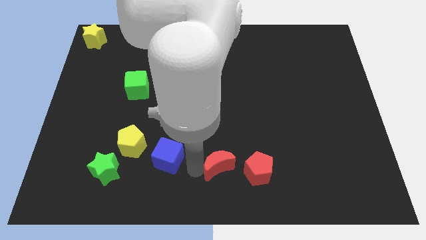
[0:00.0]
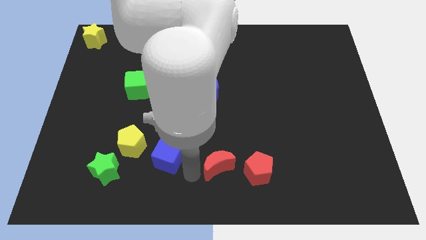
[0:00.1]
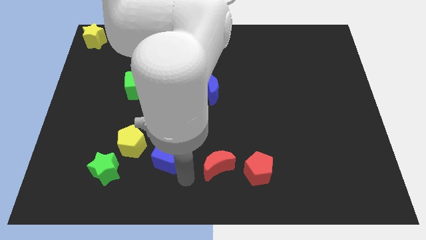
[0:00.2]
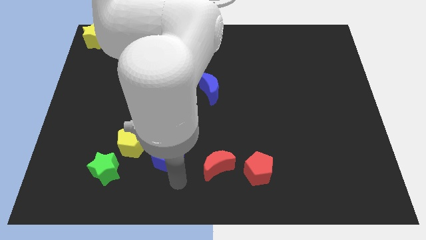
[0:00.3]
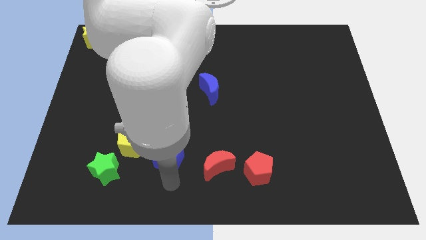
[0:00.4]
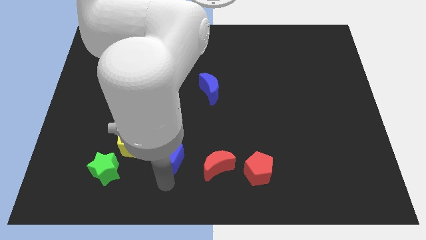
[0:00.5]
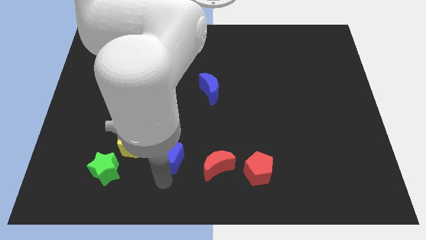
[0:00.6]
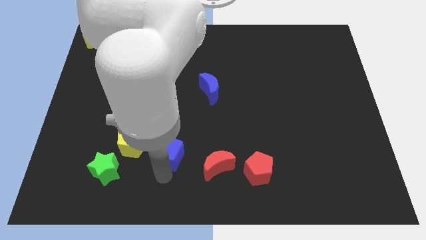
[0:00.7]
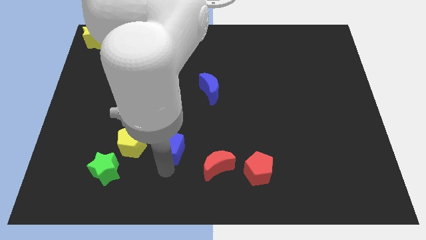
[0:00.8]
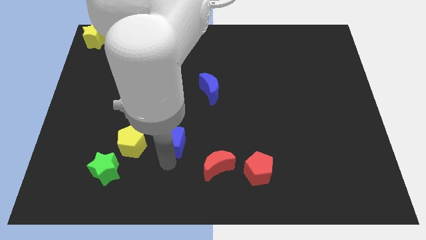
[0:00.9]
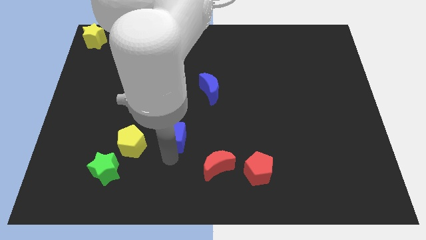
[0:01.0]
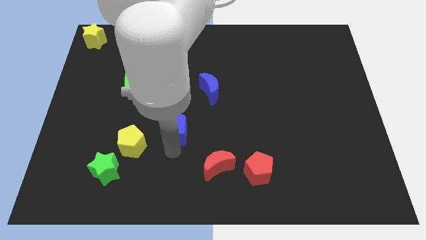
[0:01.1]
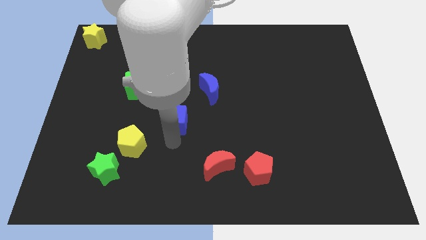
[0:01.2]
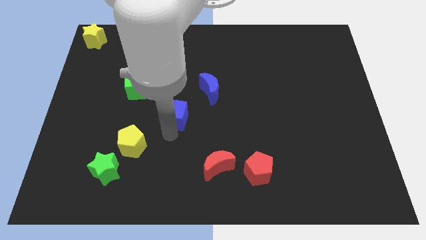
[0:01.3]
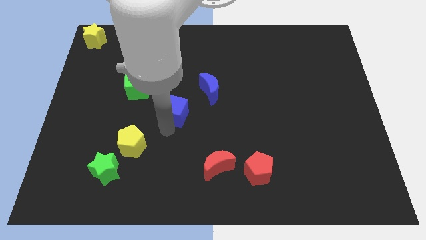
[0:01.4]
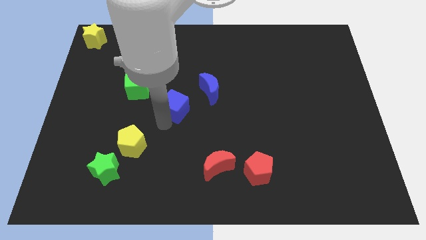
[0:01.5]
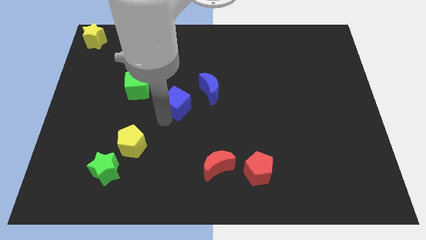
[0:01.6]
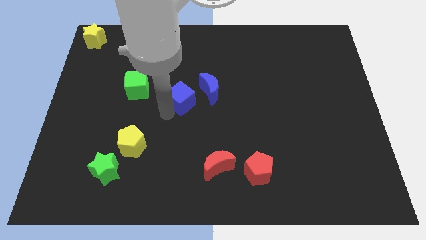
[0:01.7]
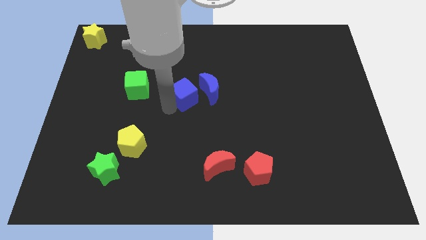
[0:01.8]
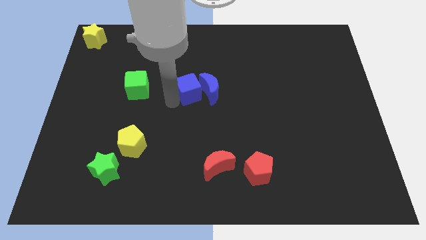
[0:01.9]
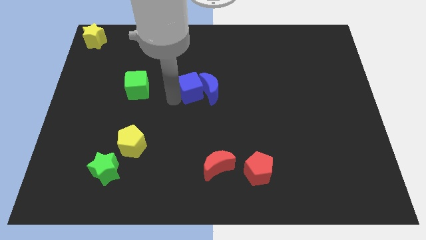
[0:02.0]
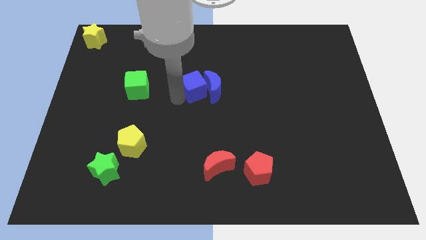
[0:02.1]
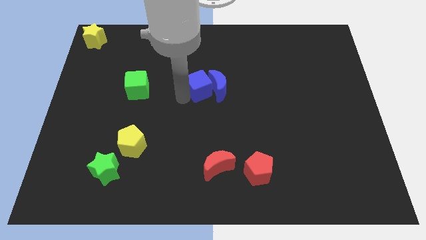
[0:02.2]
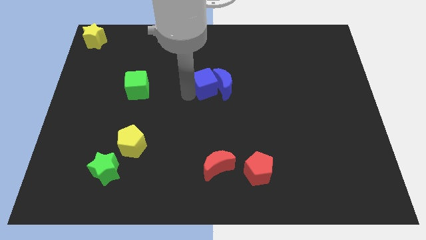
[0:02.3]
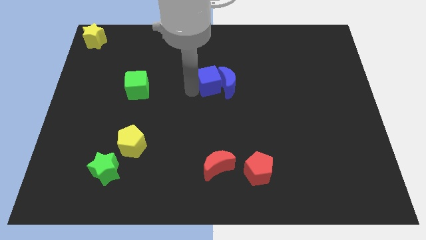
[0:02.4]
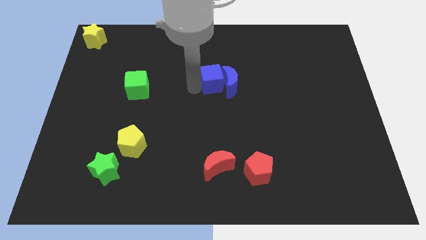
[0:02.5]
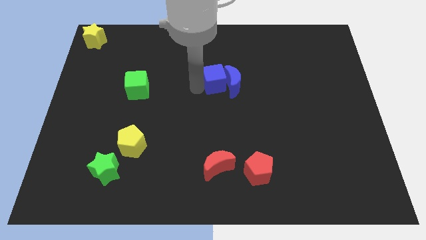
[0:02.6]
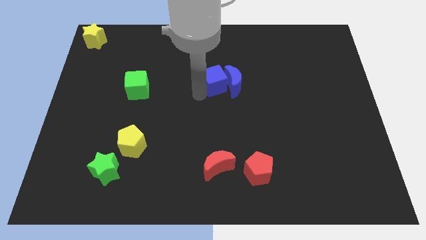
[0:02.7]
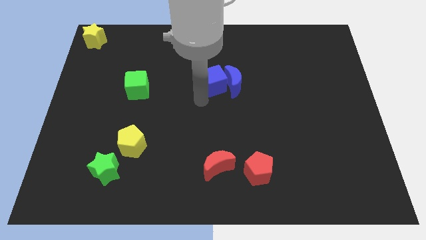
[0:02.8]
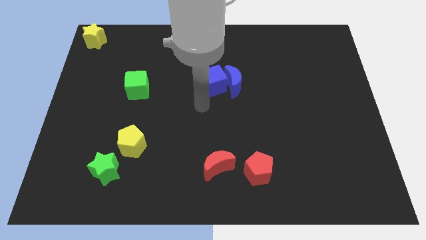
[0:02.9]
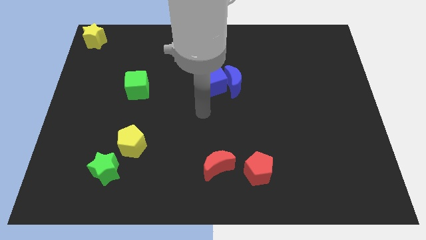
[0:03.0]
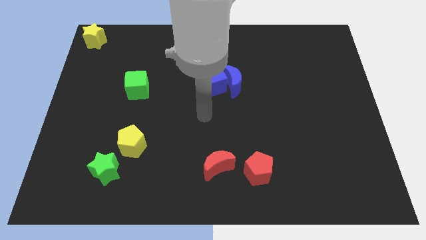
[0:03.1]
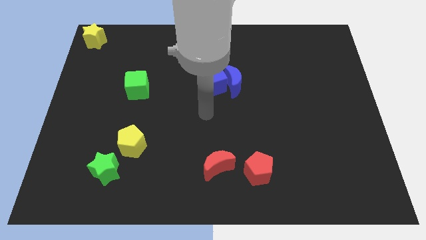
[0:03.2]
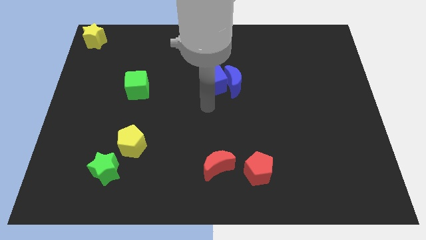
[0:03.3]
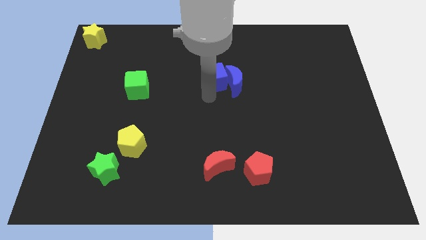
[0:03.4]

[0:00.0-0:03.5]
push the blue cube into the blue moon

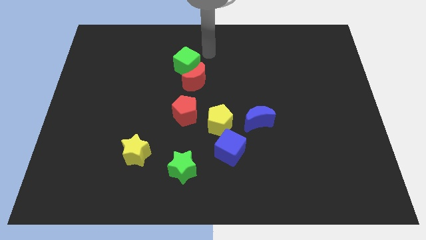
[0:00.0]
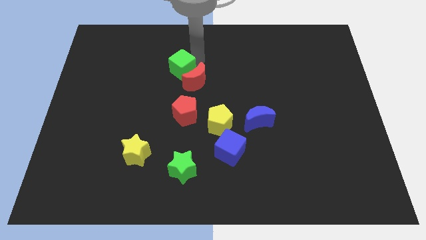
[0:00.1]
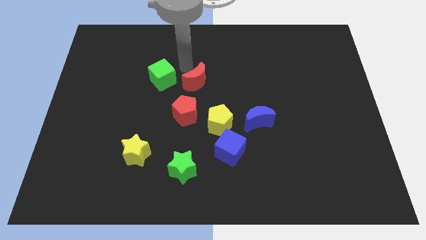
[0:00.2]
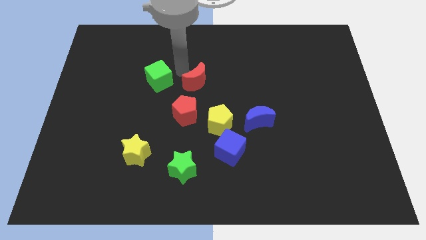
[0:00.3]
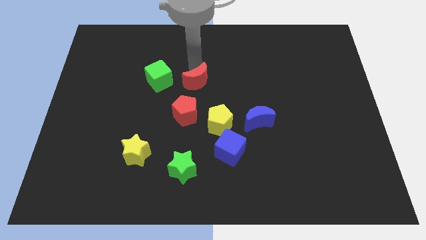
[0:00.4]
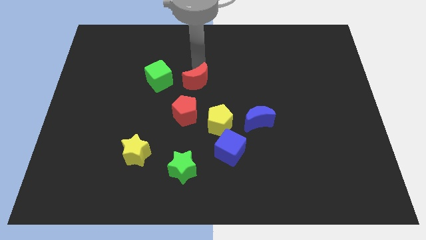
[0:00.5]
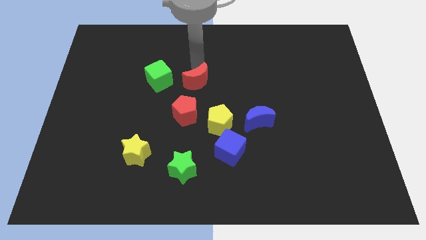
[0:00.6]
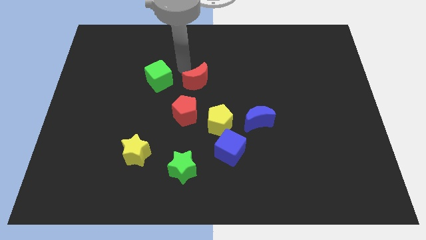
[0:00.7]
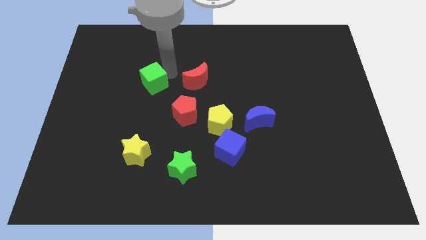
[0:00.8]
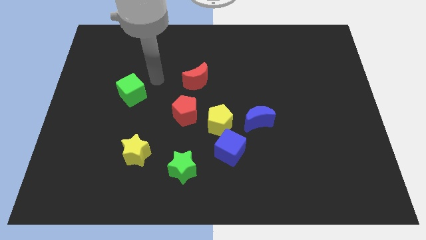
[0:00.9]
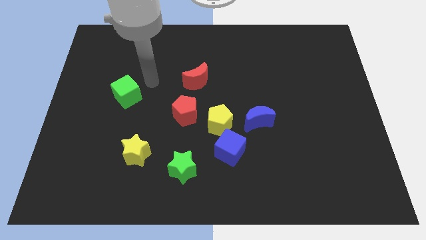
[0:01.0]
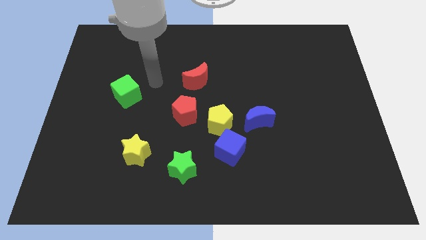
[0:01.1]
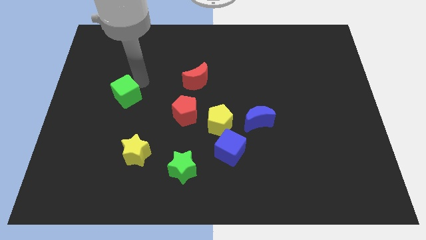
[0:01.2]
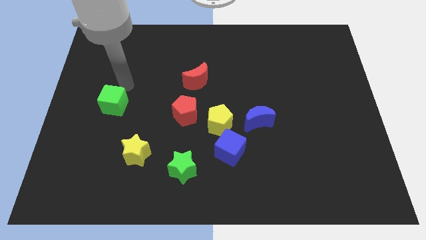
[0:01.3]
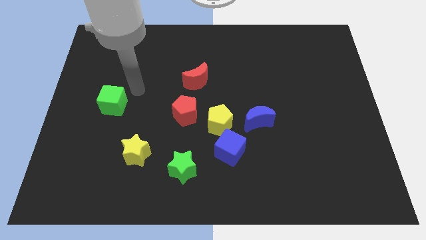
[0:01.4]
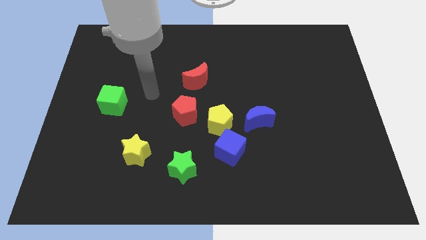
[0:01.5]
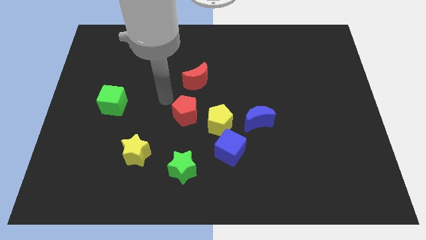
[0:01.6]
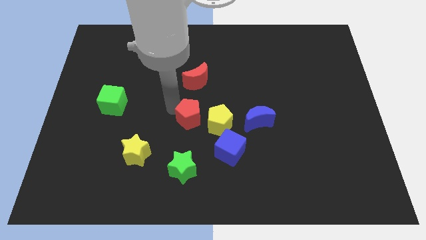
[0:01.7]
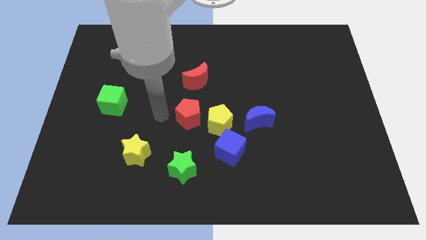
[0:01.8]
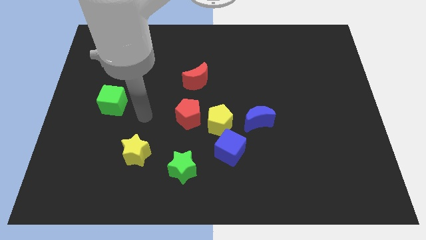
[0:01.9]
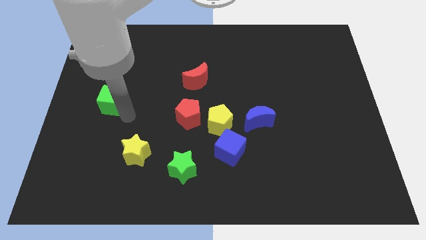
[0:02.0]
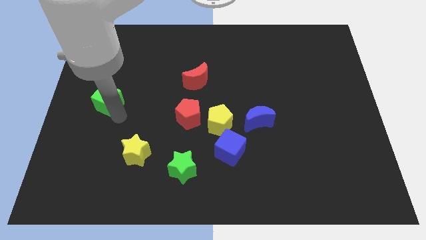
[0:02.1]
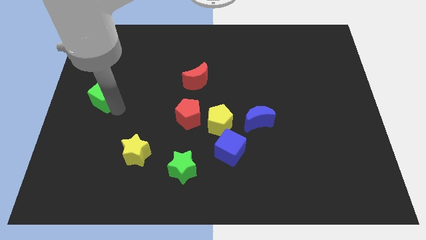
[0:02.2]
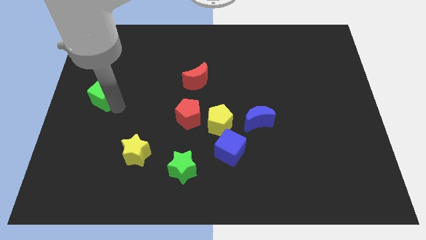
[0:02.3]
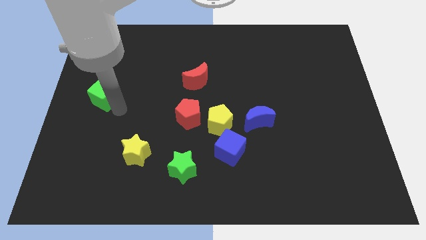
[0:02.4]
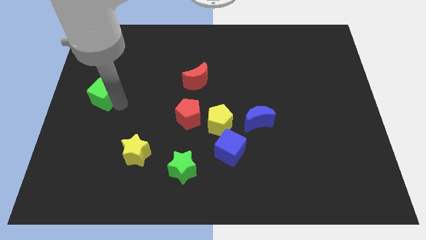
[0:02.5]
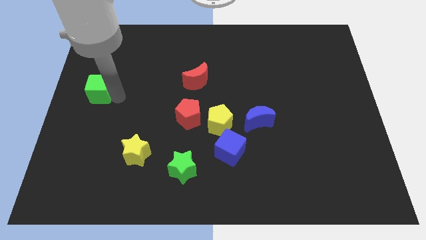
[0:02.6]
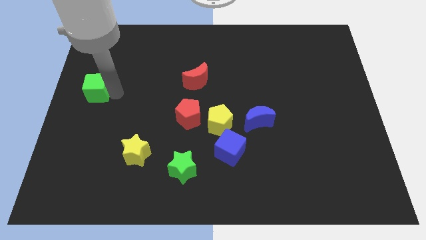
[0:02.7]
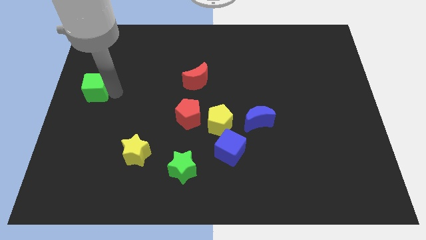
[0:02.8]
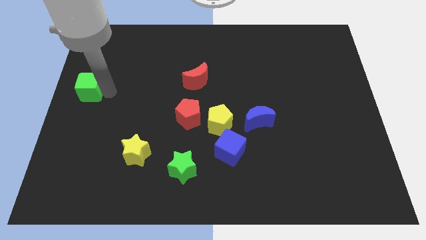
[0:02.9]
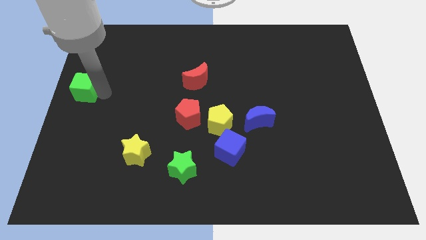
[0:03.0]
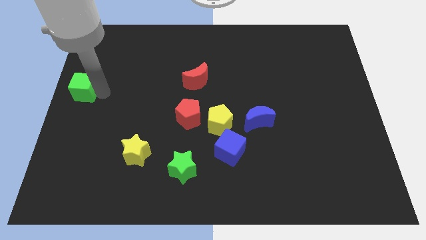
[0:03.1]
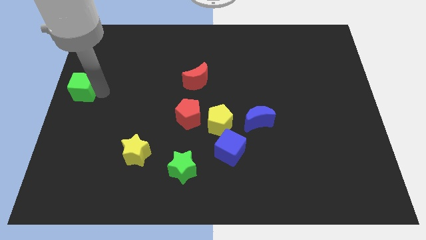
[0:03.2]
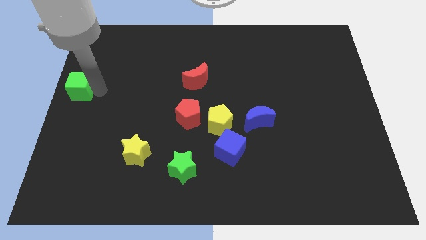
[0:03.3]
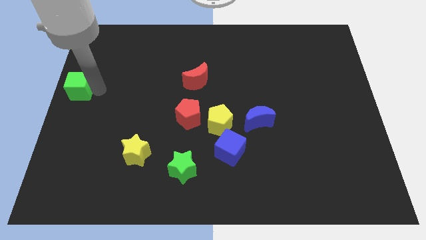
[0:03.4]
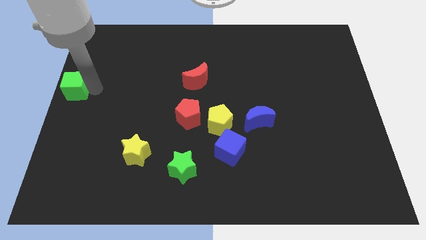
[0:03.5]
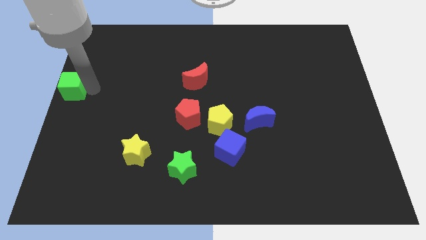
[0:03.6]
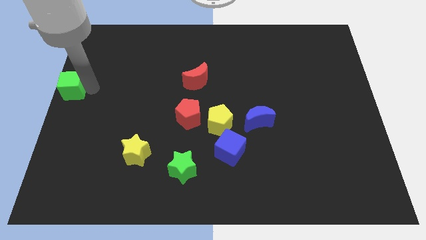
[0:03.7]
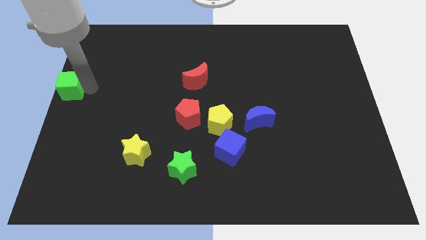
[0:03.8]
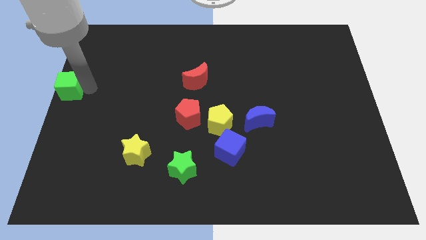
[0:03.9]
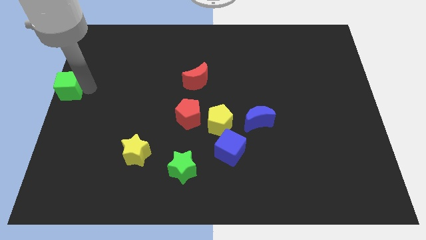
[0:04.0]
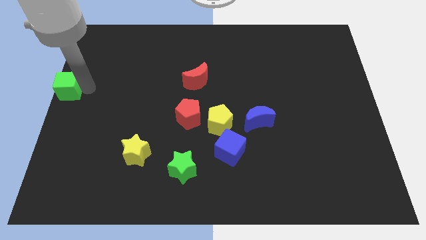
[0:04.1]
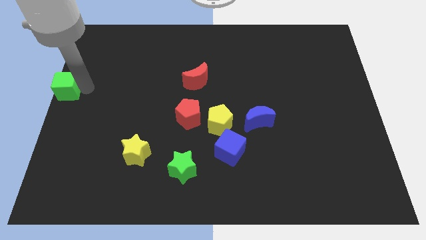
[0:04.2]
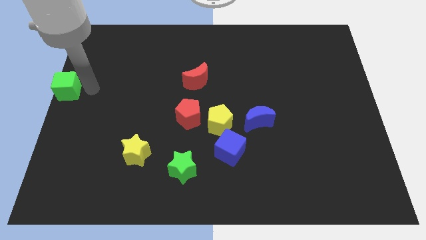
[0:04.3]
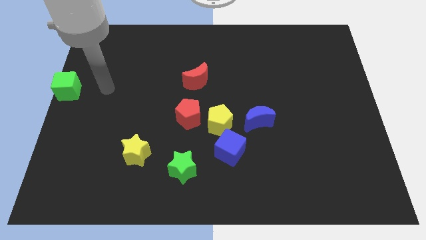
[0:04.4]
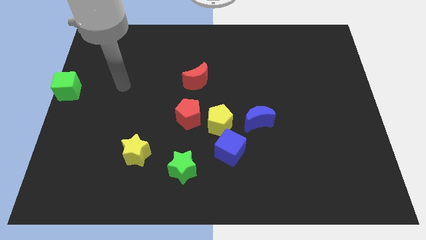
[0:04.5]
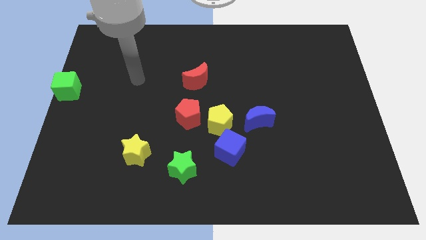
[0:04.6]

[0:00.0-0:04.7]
push the green cube to the left center of the board

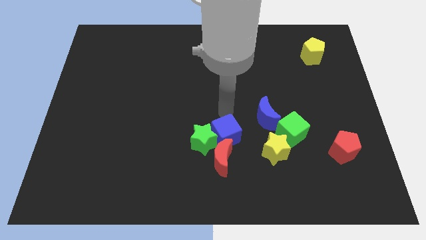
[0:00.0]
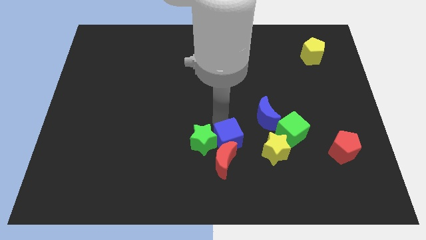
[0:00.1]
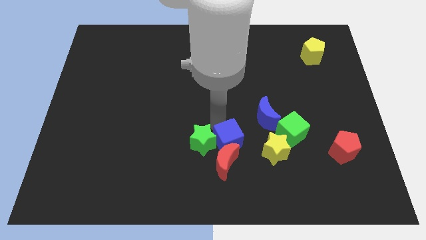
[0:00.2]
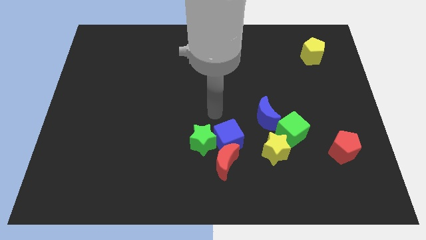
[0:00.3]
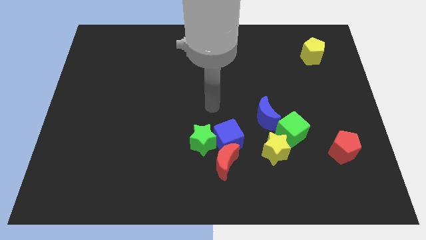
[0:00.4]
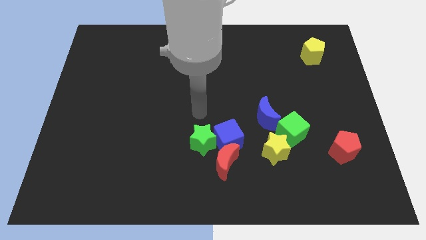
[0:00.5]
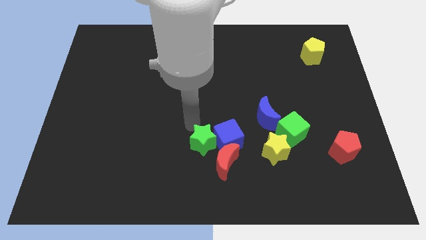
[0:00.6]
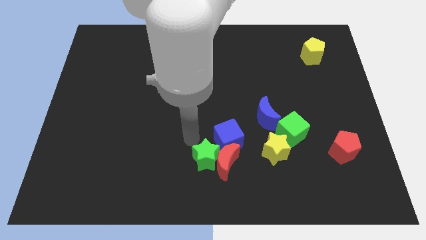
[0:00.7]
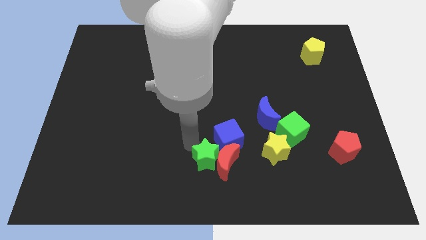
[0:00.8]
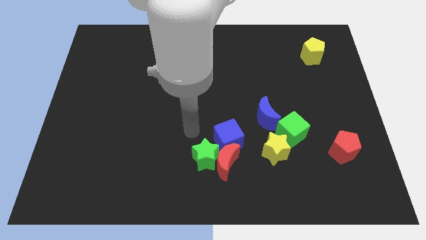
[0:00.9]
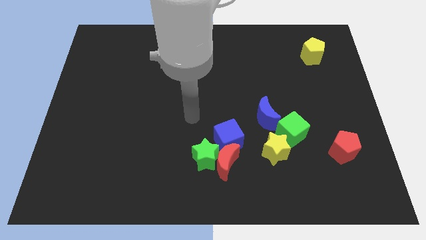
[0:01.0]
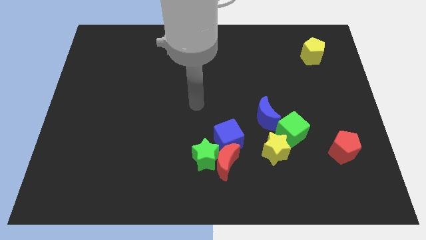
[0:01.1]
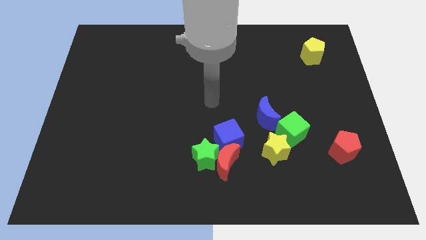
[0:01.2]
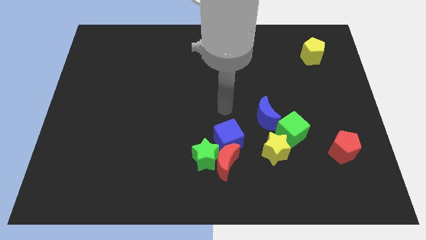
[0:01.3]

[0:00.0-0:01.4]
push the blue cube into the red moon
